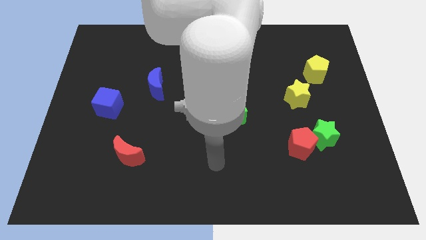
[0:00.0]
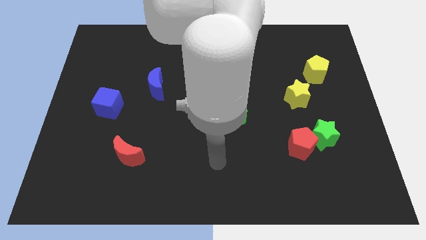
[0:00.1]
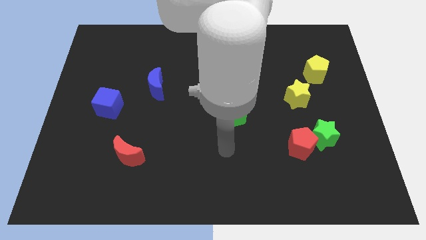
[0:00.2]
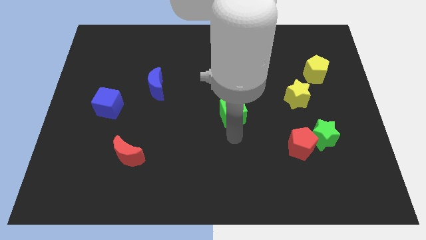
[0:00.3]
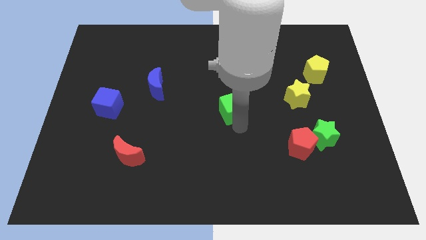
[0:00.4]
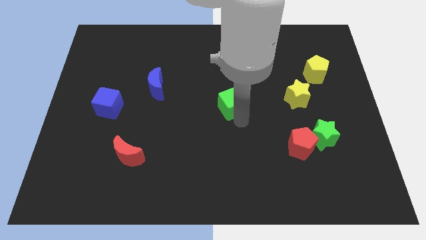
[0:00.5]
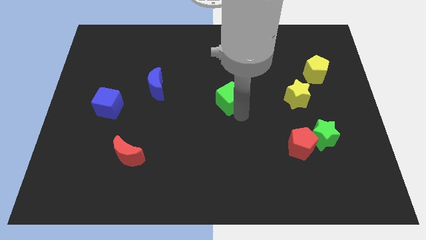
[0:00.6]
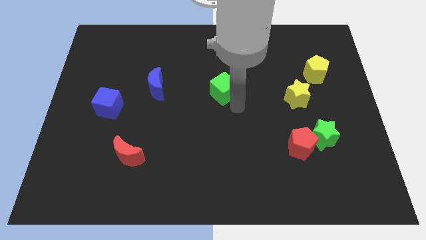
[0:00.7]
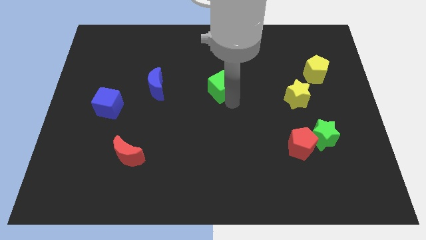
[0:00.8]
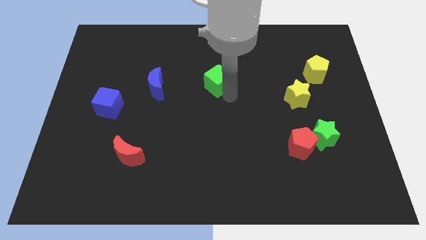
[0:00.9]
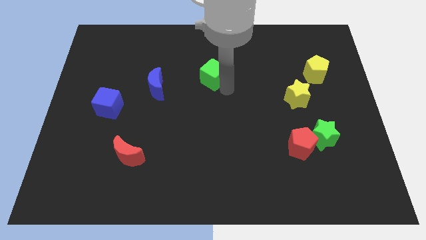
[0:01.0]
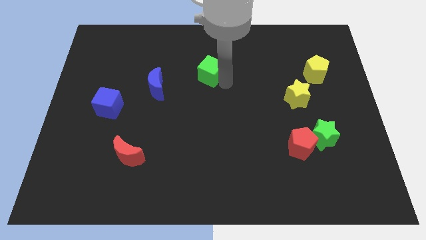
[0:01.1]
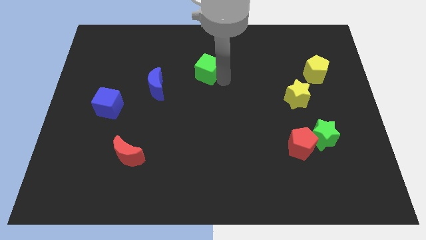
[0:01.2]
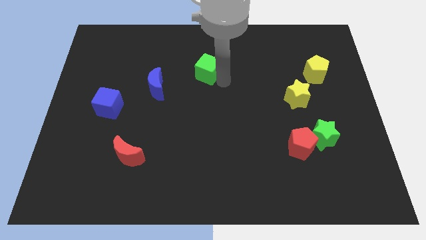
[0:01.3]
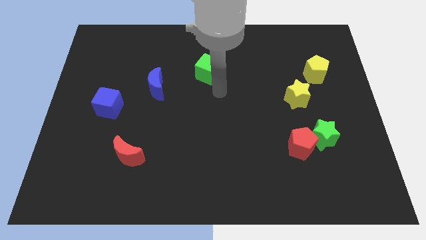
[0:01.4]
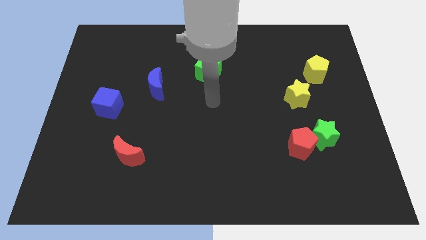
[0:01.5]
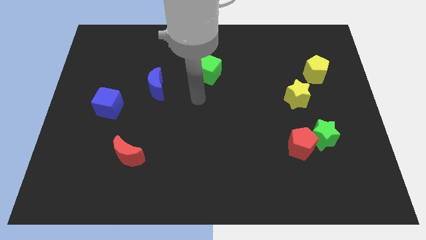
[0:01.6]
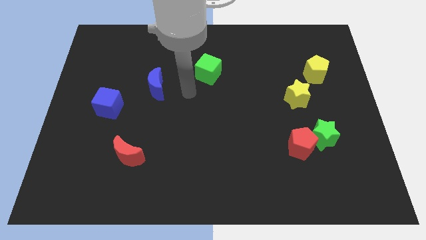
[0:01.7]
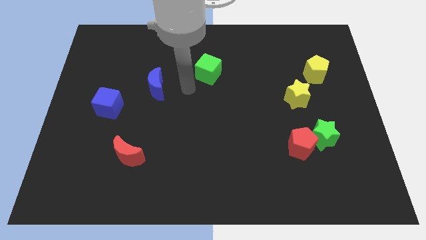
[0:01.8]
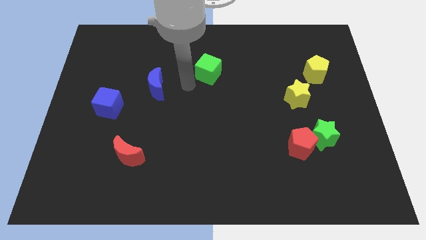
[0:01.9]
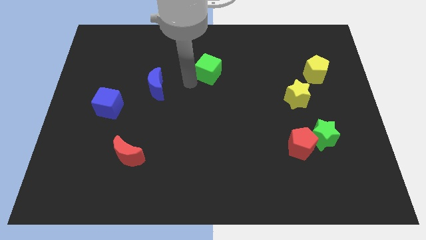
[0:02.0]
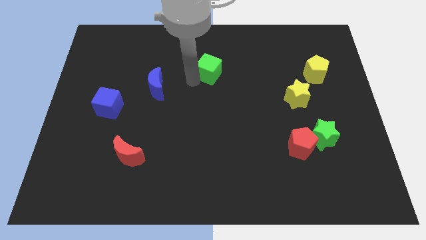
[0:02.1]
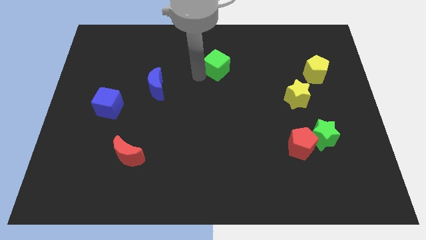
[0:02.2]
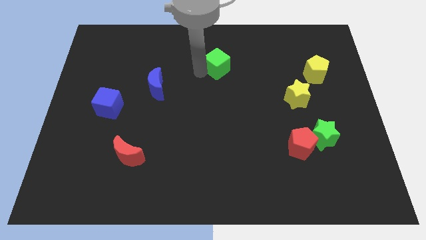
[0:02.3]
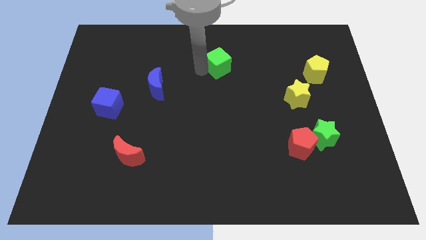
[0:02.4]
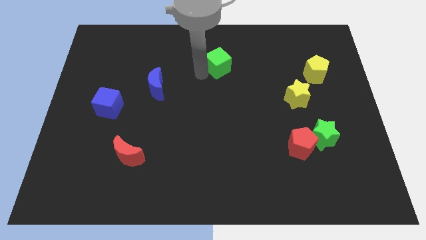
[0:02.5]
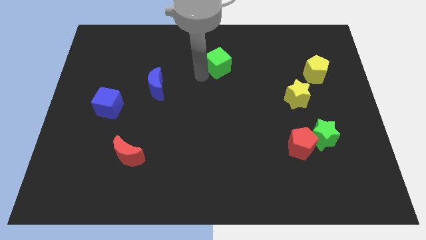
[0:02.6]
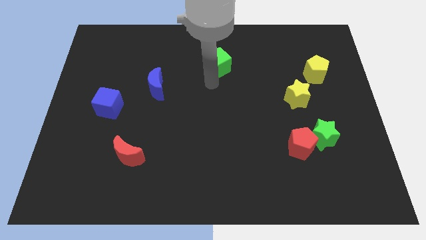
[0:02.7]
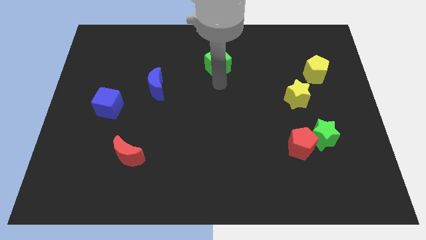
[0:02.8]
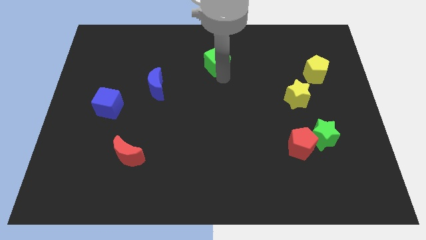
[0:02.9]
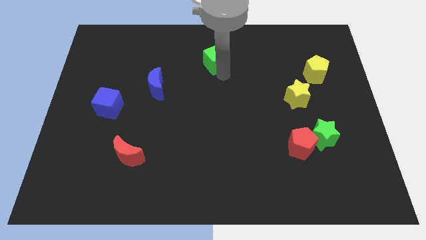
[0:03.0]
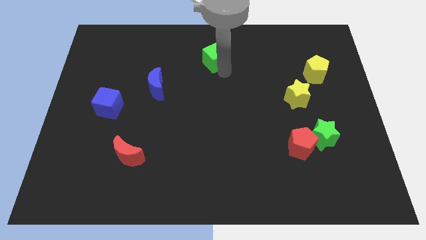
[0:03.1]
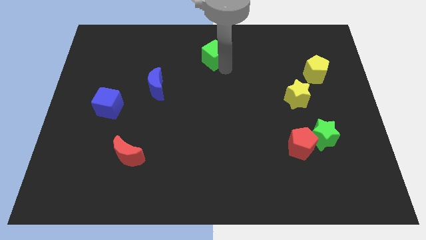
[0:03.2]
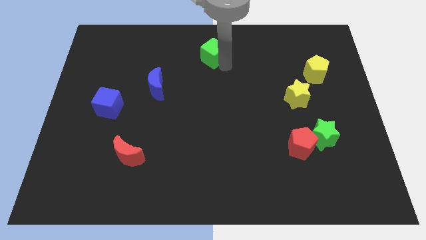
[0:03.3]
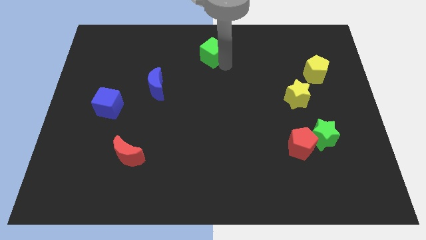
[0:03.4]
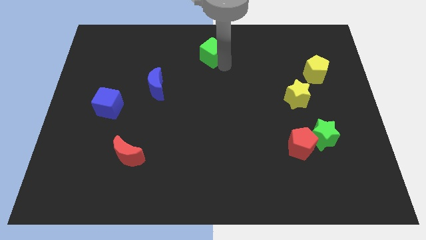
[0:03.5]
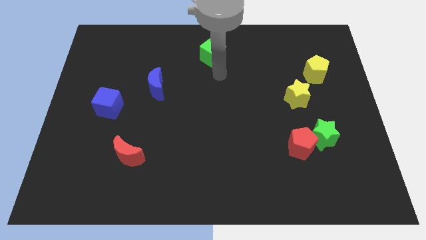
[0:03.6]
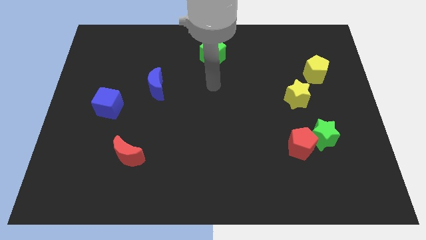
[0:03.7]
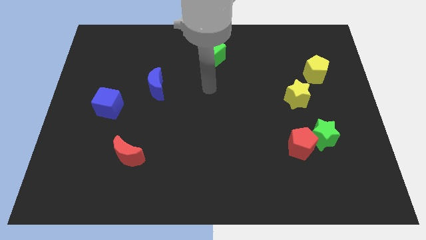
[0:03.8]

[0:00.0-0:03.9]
move the green cube towards the top center

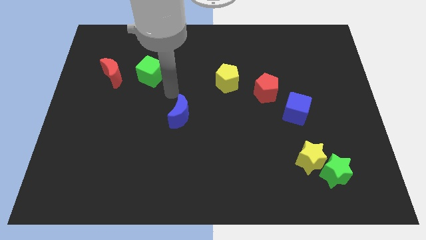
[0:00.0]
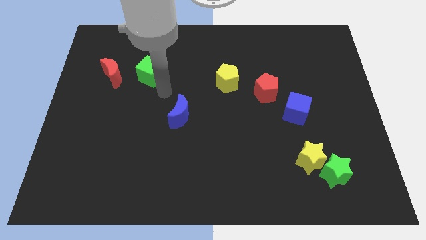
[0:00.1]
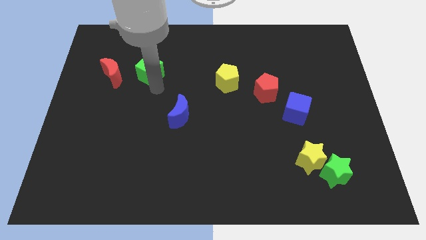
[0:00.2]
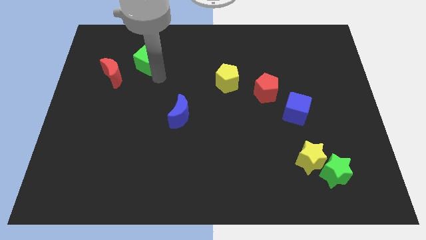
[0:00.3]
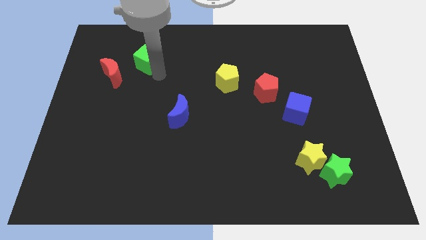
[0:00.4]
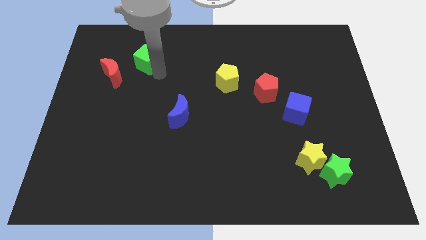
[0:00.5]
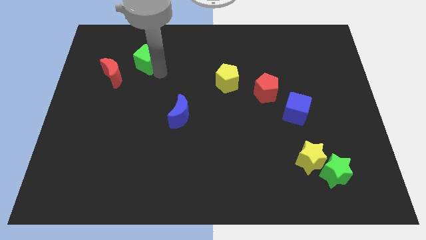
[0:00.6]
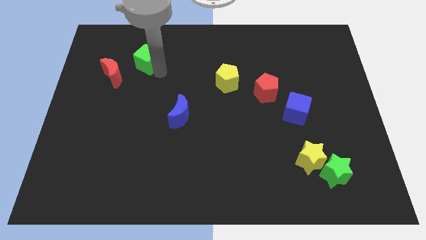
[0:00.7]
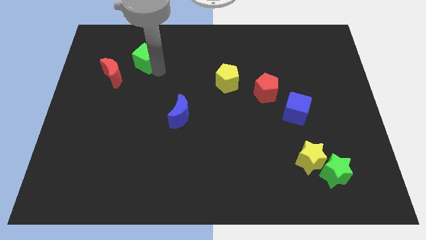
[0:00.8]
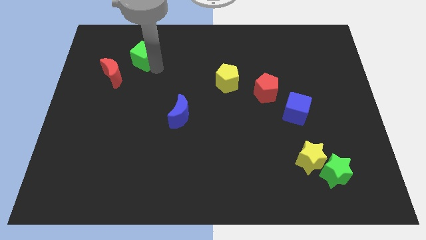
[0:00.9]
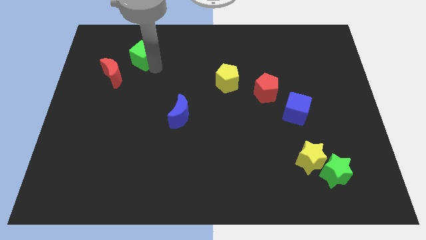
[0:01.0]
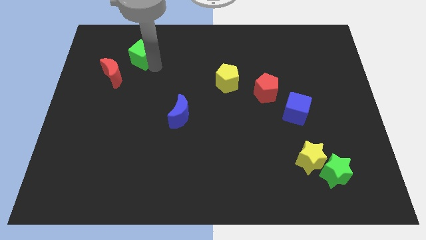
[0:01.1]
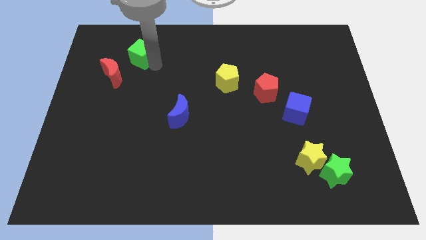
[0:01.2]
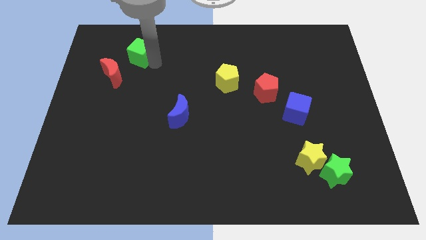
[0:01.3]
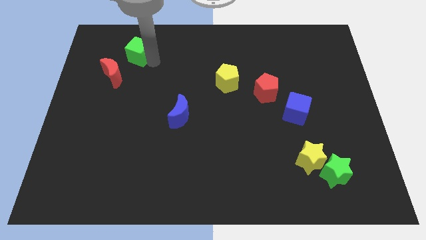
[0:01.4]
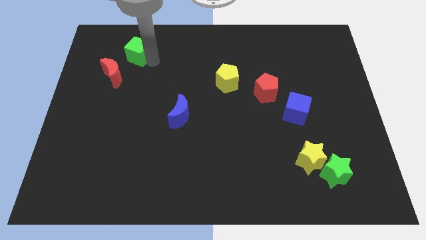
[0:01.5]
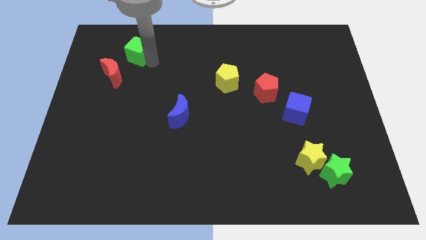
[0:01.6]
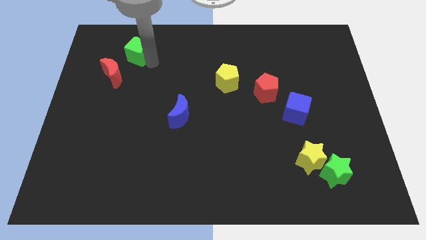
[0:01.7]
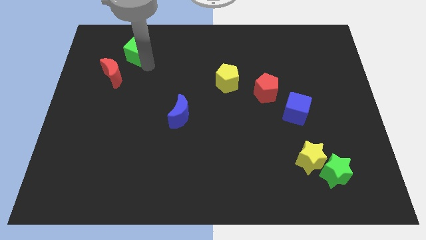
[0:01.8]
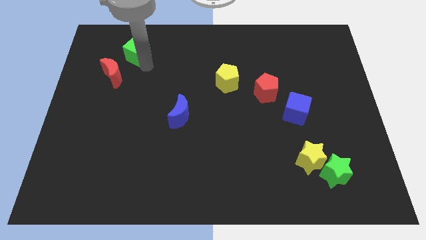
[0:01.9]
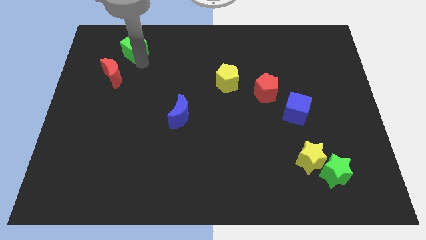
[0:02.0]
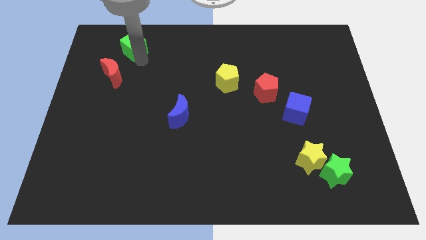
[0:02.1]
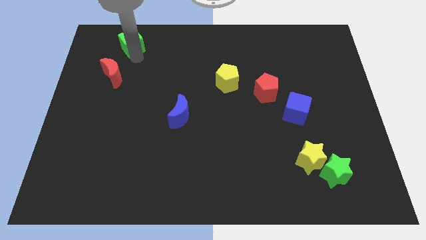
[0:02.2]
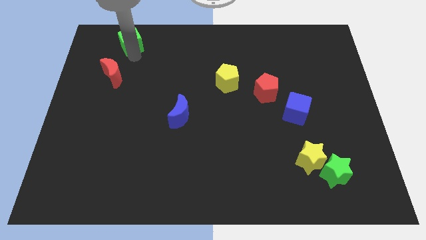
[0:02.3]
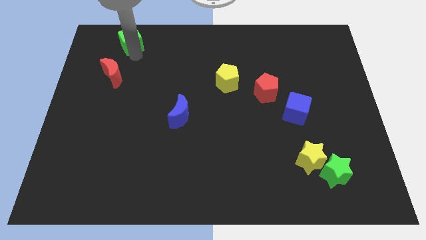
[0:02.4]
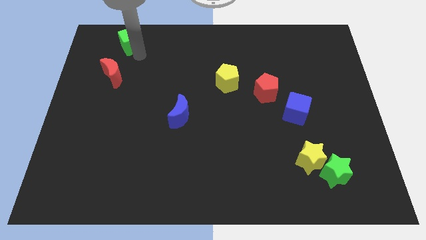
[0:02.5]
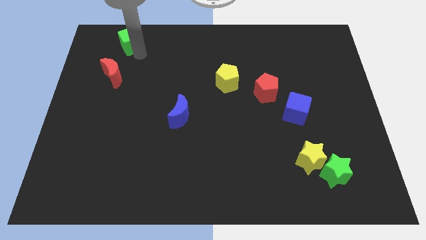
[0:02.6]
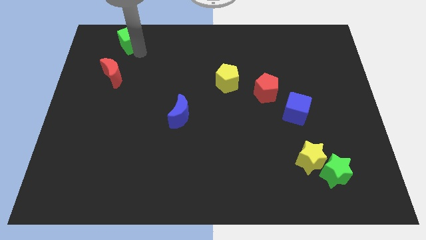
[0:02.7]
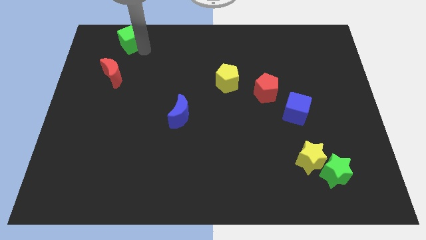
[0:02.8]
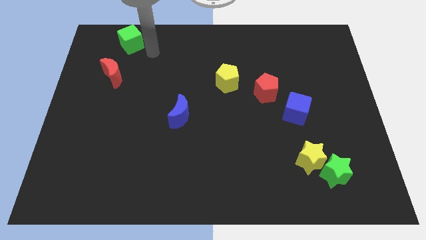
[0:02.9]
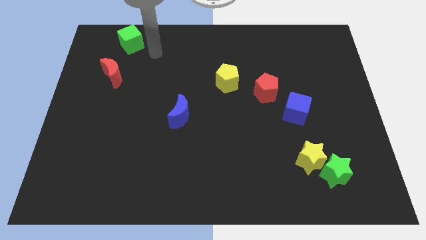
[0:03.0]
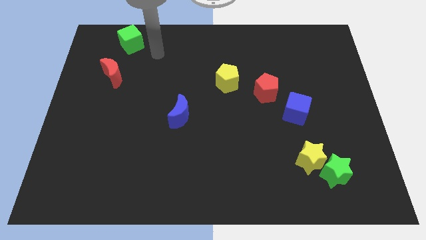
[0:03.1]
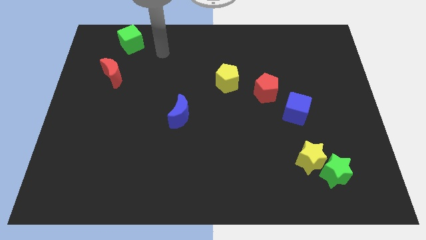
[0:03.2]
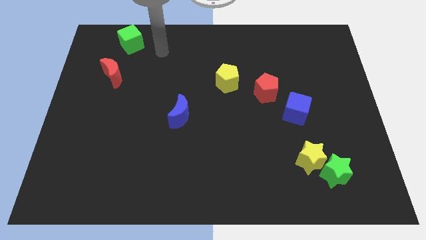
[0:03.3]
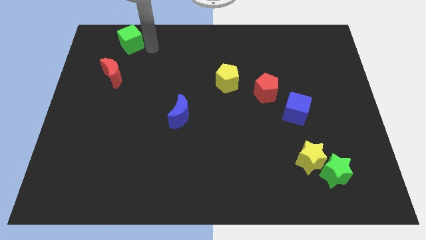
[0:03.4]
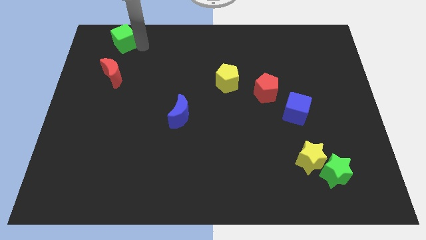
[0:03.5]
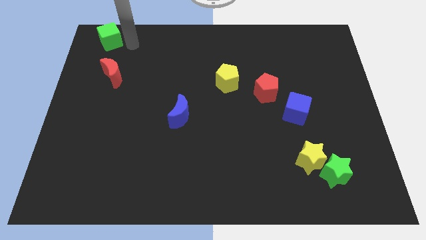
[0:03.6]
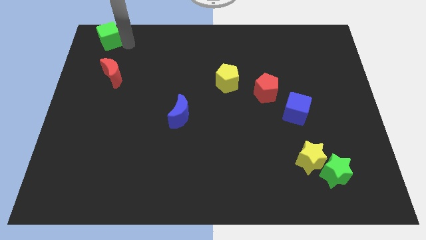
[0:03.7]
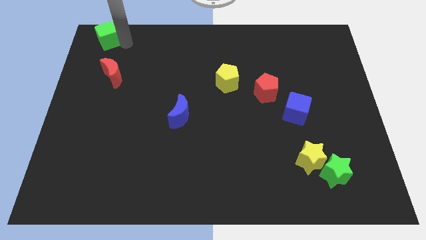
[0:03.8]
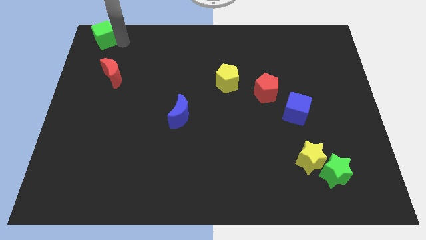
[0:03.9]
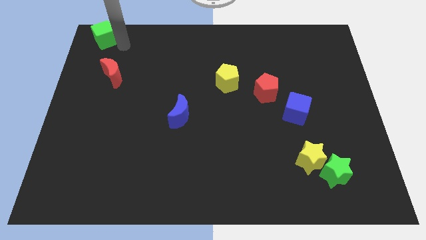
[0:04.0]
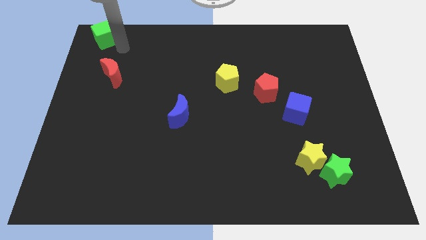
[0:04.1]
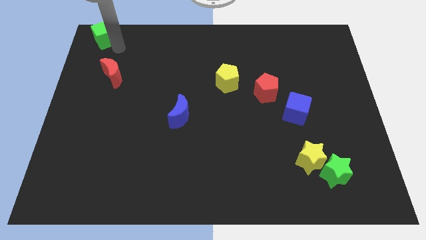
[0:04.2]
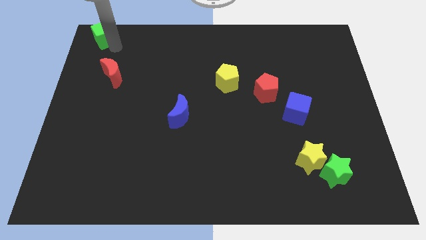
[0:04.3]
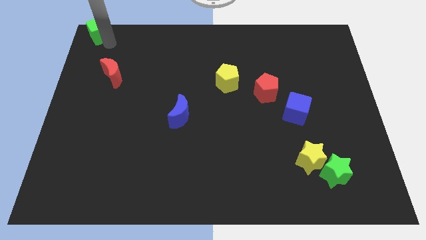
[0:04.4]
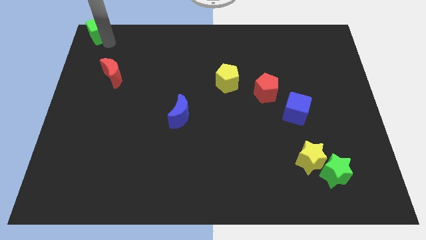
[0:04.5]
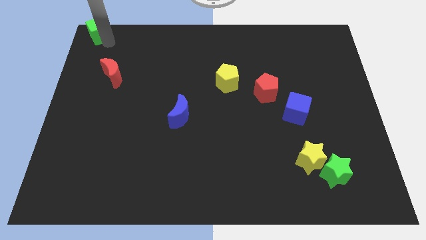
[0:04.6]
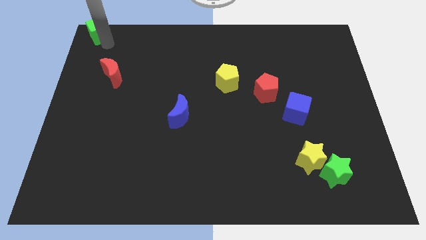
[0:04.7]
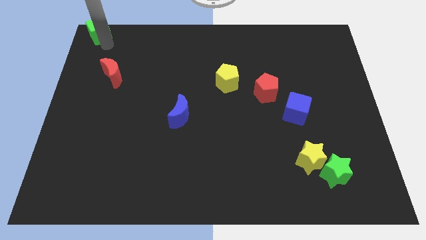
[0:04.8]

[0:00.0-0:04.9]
place green cube to the top left of the board
